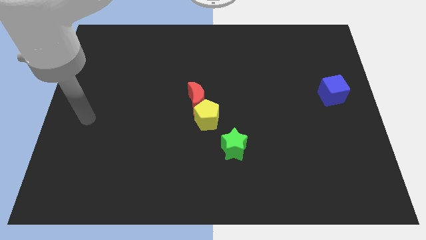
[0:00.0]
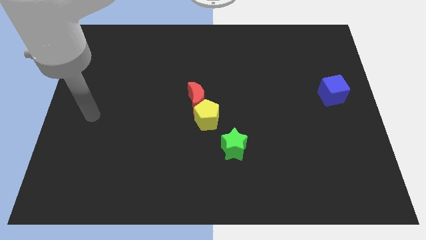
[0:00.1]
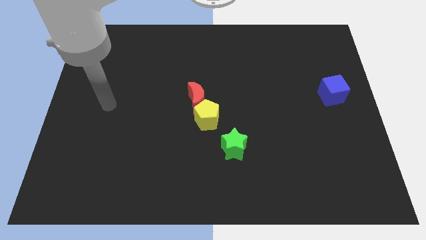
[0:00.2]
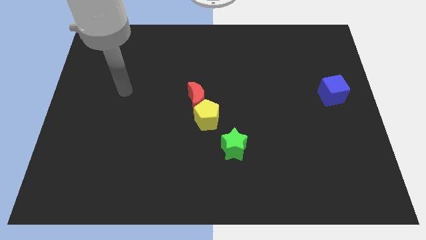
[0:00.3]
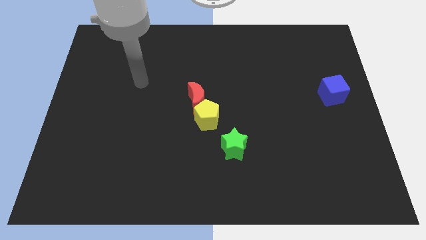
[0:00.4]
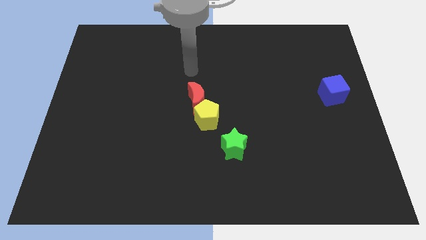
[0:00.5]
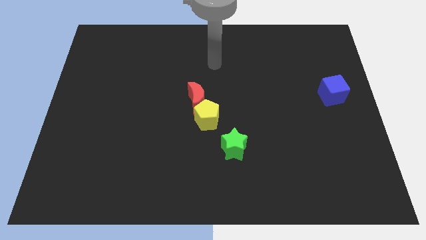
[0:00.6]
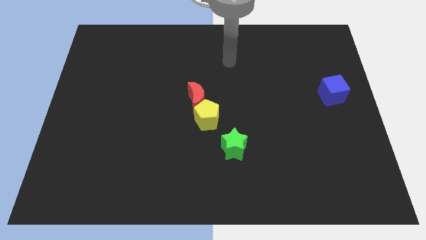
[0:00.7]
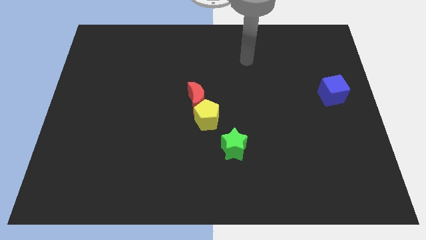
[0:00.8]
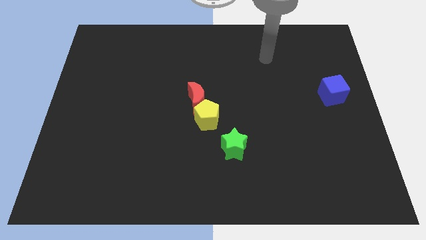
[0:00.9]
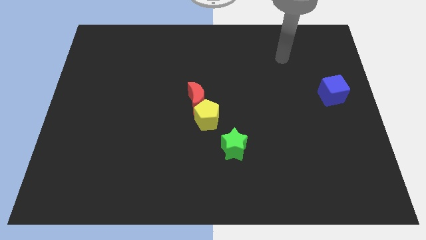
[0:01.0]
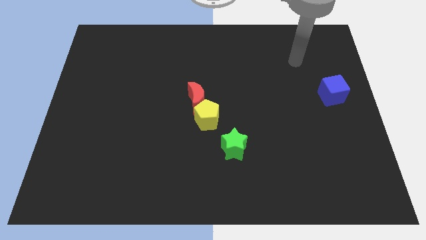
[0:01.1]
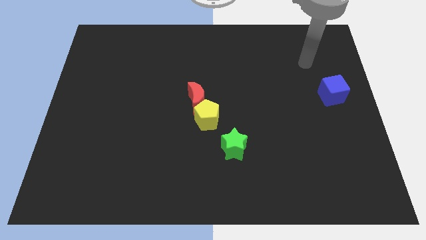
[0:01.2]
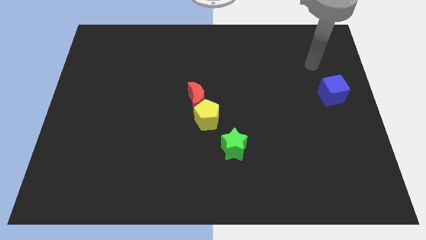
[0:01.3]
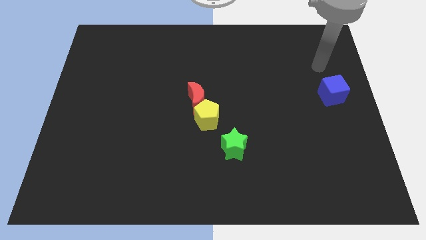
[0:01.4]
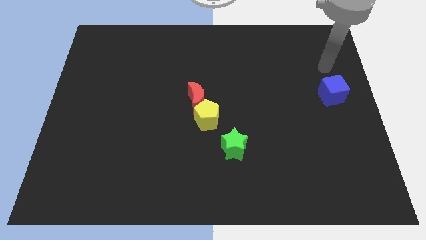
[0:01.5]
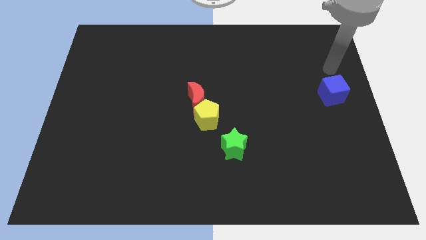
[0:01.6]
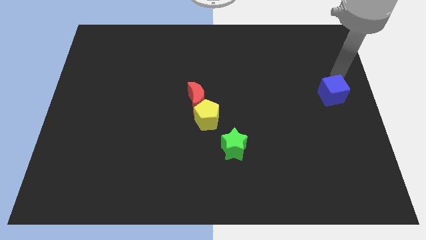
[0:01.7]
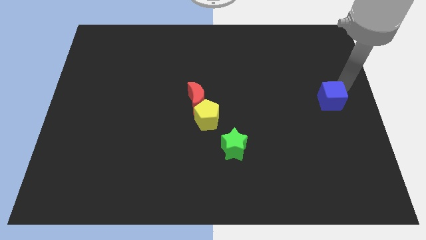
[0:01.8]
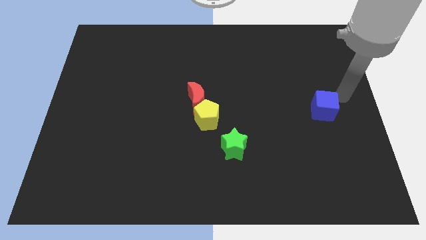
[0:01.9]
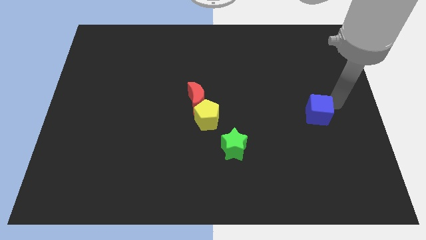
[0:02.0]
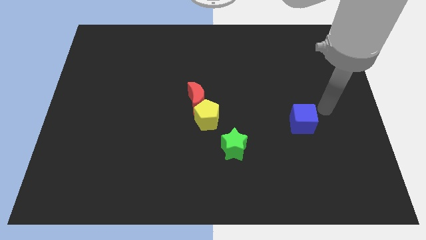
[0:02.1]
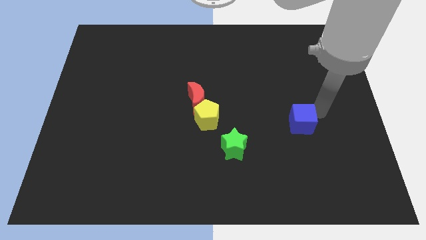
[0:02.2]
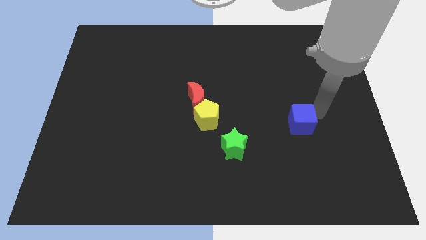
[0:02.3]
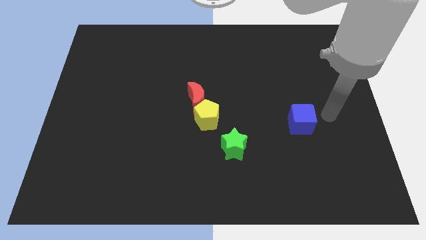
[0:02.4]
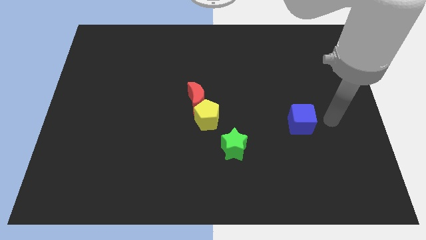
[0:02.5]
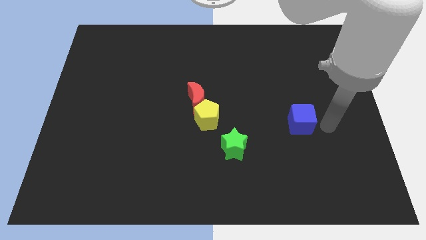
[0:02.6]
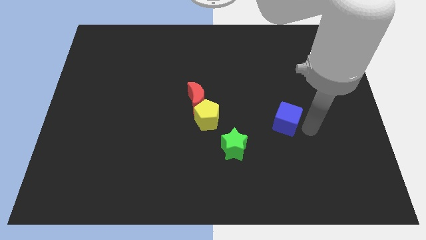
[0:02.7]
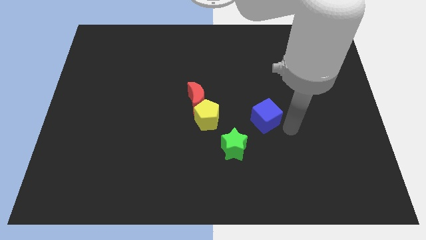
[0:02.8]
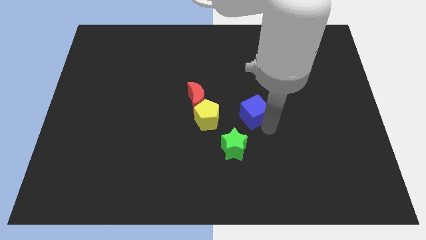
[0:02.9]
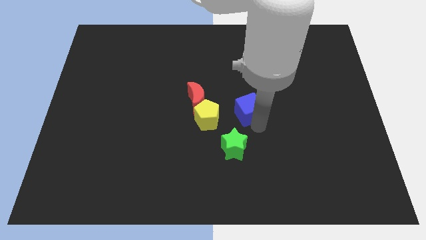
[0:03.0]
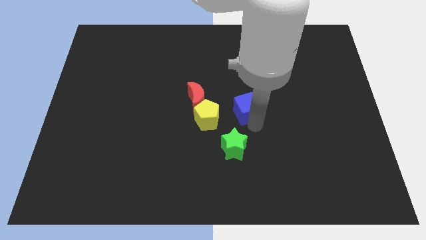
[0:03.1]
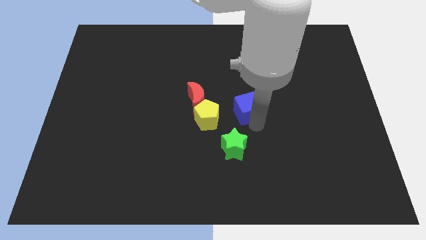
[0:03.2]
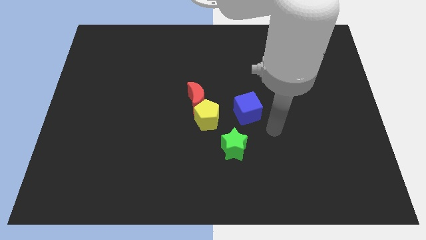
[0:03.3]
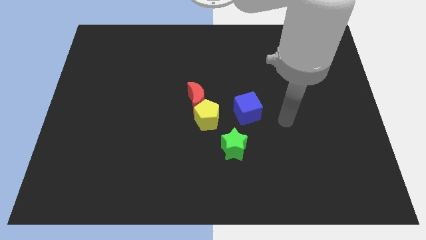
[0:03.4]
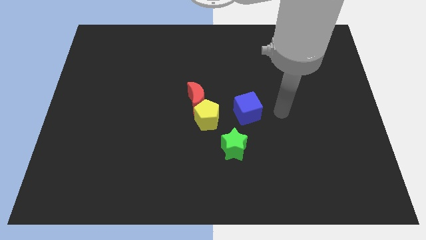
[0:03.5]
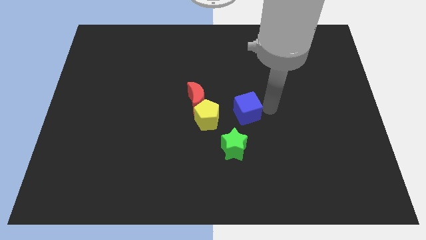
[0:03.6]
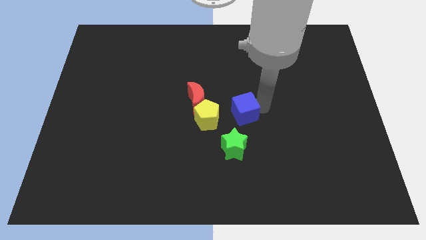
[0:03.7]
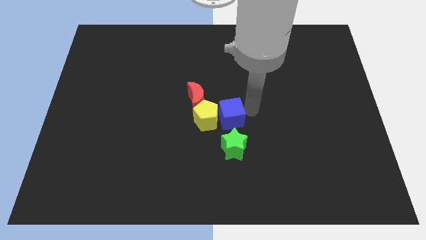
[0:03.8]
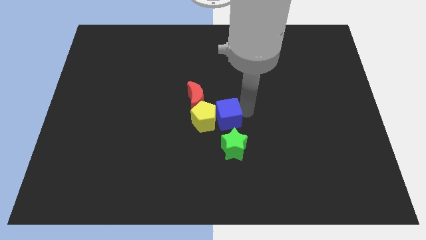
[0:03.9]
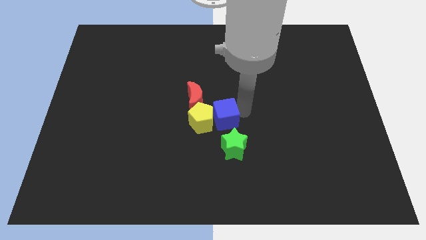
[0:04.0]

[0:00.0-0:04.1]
put the cube to the yellow pentagon

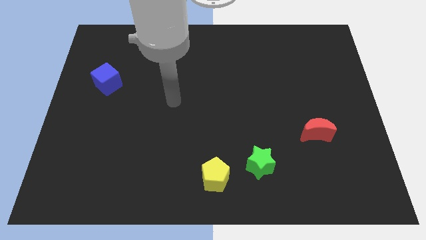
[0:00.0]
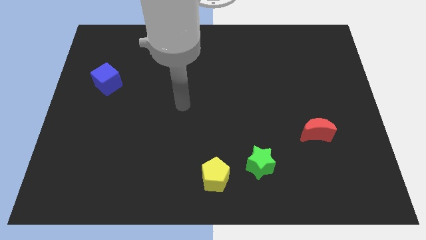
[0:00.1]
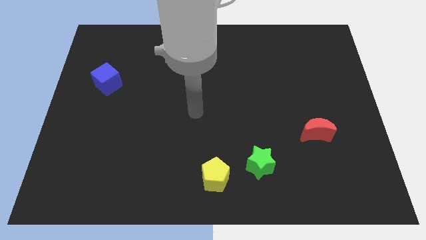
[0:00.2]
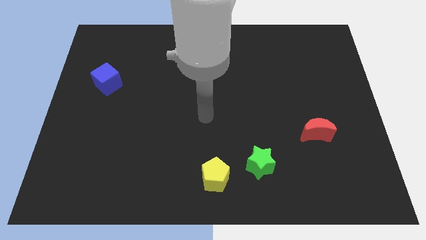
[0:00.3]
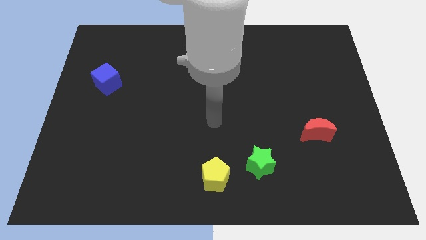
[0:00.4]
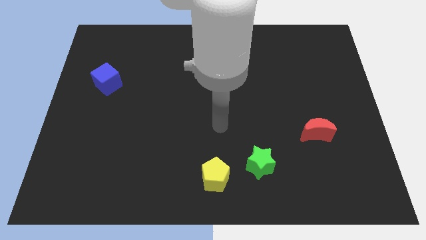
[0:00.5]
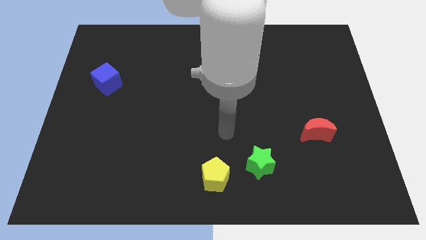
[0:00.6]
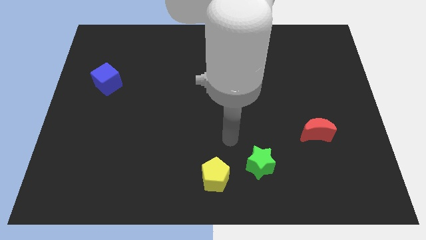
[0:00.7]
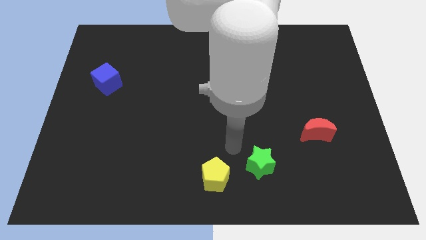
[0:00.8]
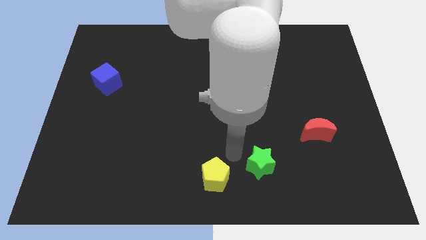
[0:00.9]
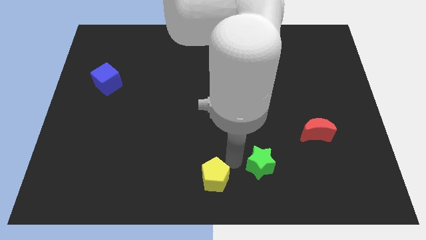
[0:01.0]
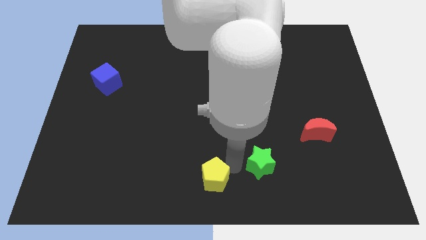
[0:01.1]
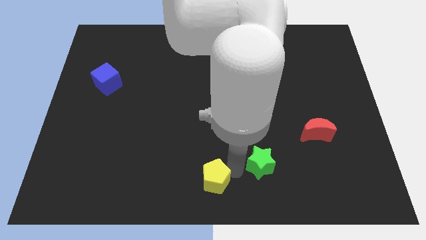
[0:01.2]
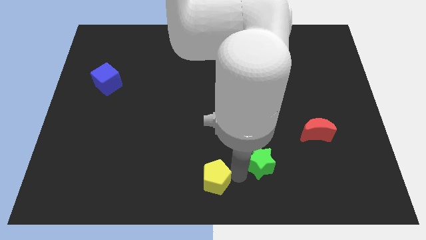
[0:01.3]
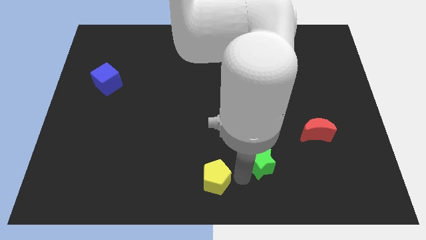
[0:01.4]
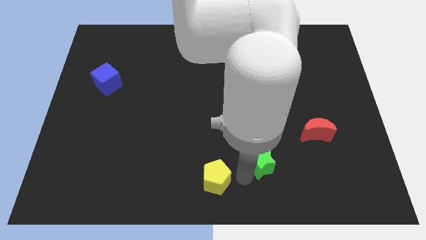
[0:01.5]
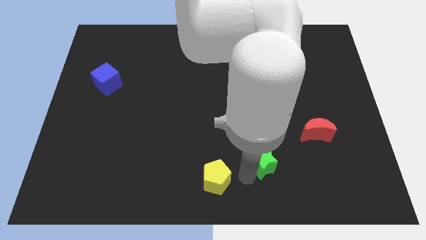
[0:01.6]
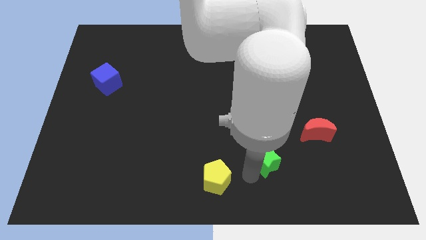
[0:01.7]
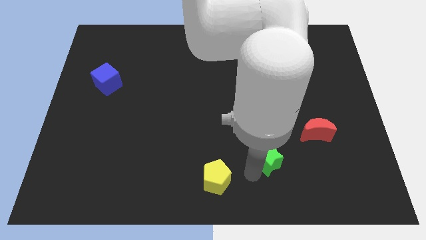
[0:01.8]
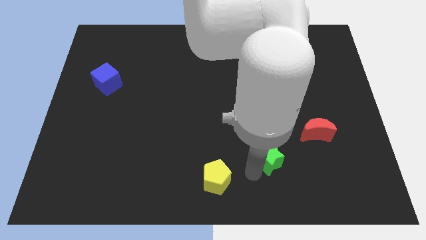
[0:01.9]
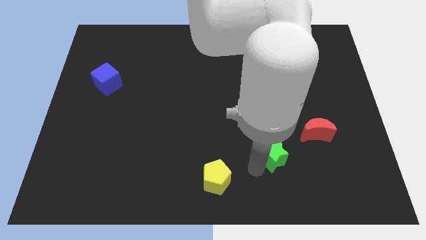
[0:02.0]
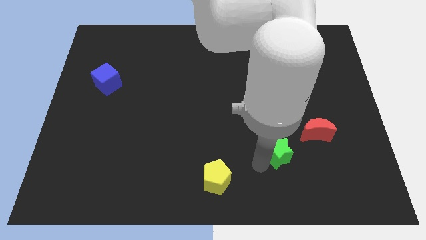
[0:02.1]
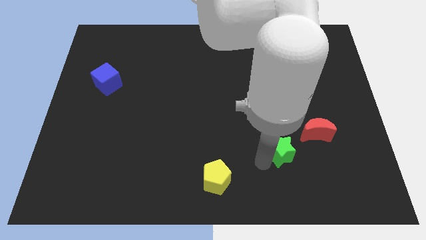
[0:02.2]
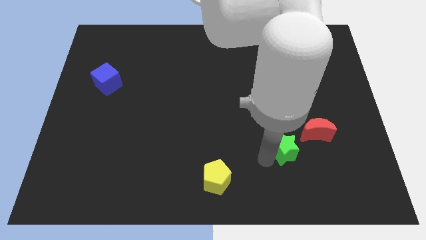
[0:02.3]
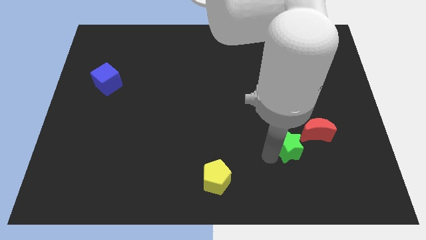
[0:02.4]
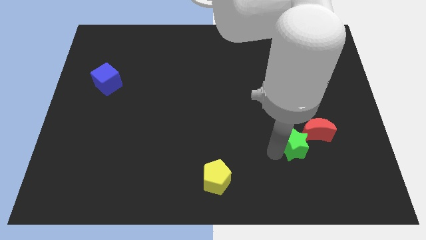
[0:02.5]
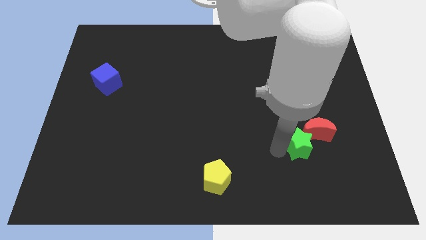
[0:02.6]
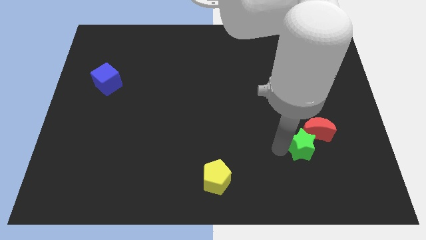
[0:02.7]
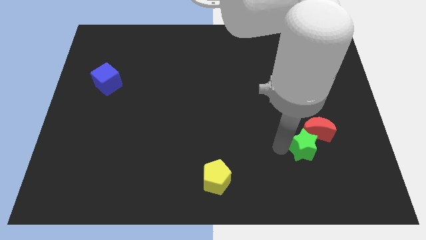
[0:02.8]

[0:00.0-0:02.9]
push the green block next to the red block

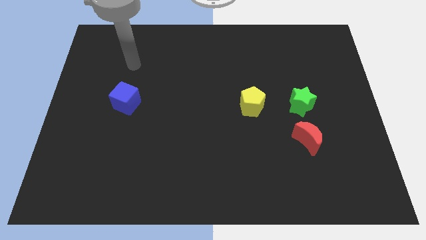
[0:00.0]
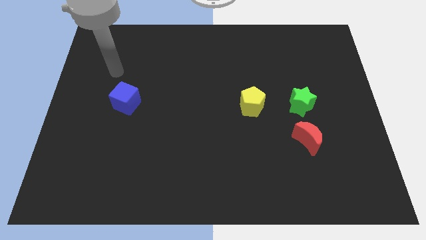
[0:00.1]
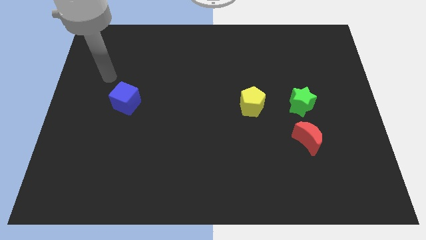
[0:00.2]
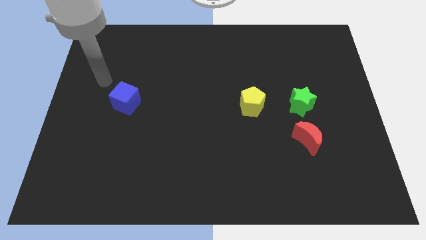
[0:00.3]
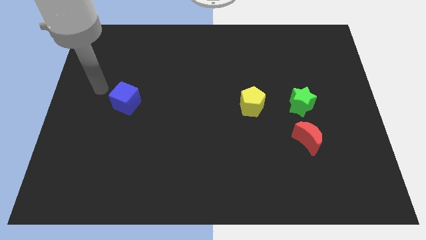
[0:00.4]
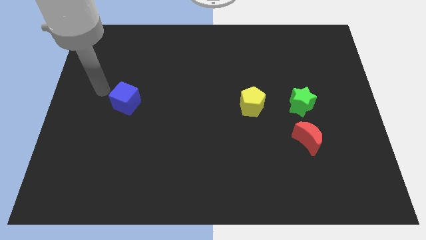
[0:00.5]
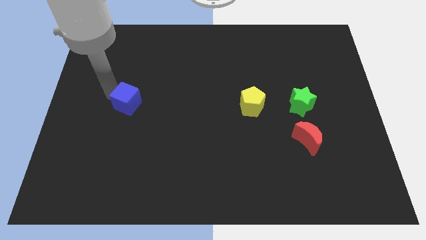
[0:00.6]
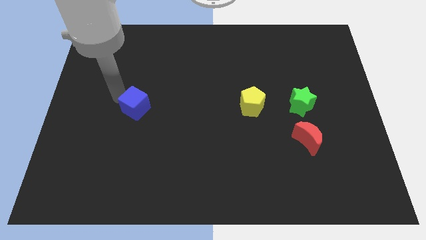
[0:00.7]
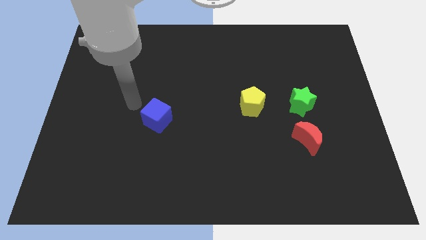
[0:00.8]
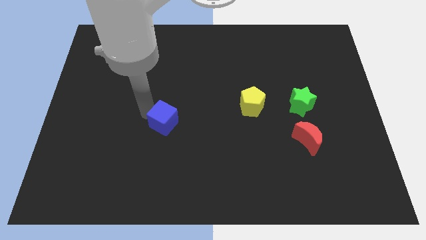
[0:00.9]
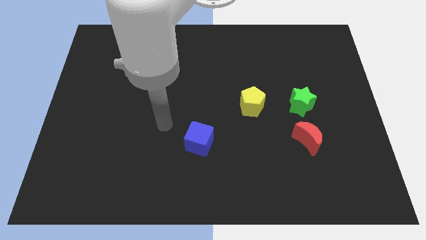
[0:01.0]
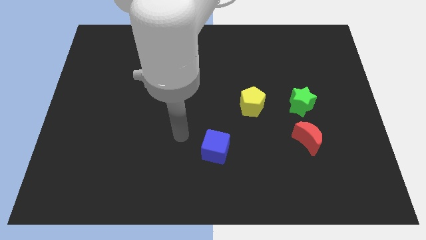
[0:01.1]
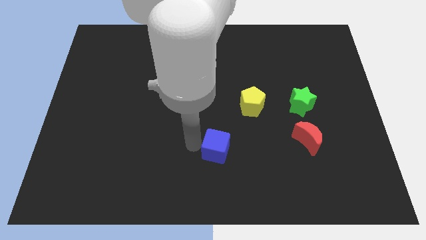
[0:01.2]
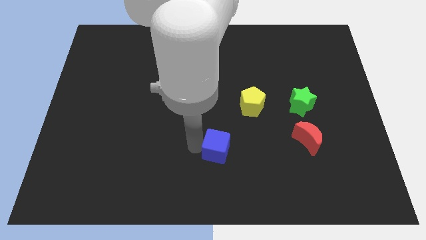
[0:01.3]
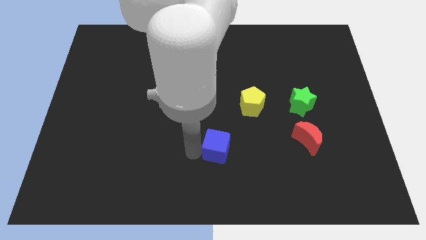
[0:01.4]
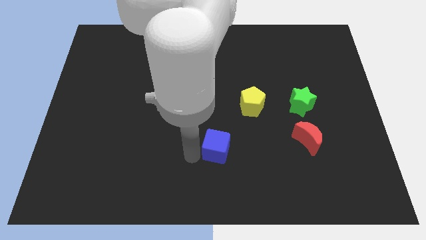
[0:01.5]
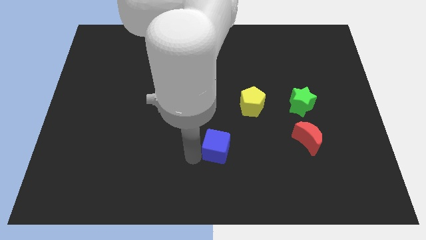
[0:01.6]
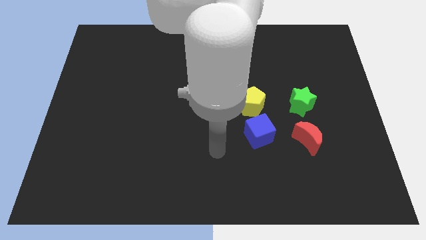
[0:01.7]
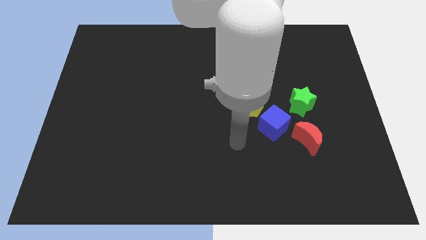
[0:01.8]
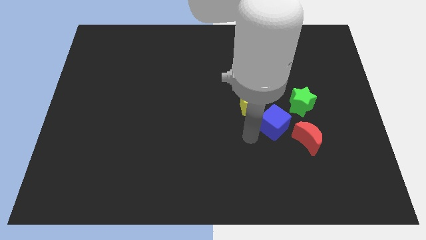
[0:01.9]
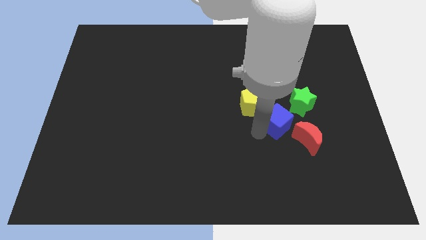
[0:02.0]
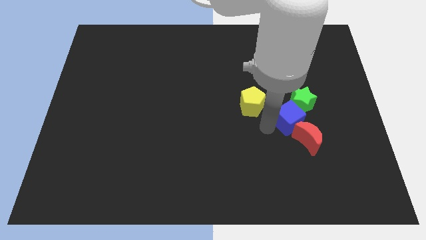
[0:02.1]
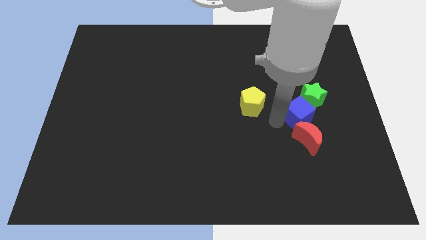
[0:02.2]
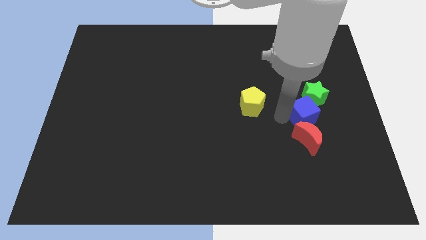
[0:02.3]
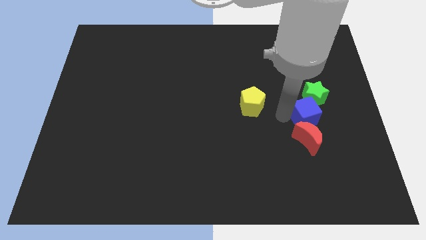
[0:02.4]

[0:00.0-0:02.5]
push the cube next to the star
